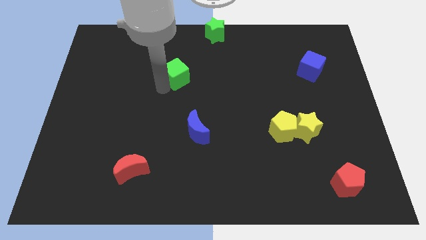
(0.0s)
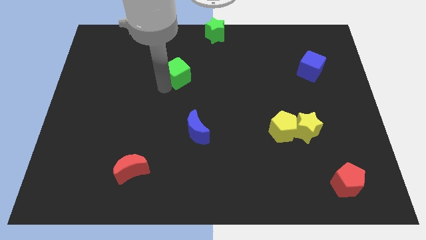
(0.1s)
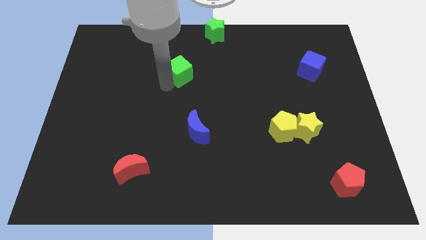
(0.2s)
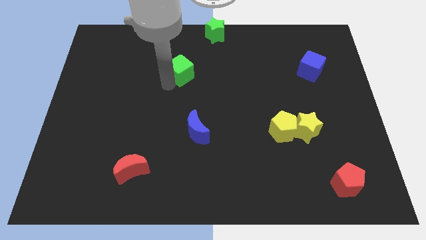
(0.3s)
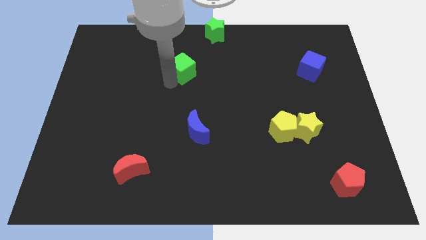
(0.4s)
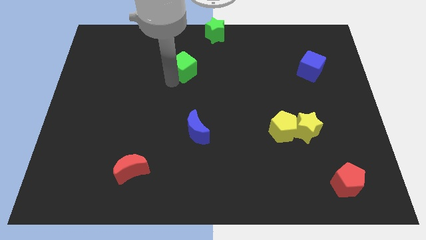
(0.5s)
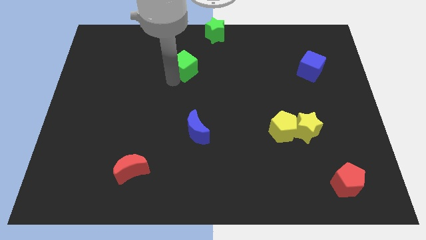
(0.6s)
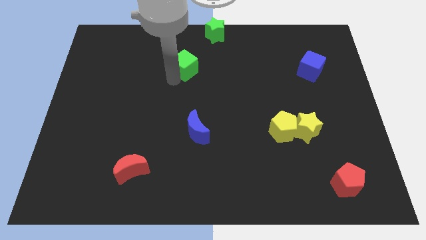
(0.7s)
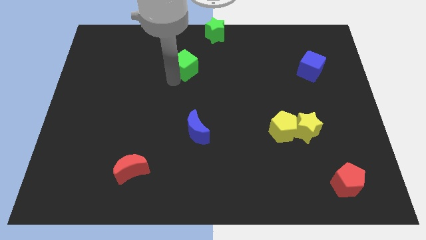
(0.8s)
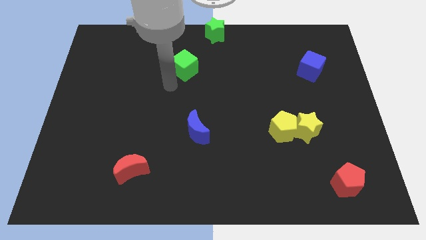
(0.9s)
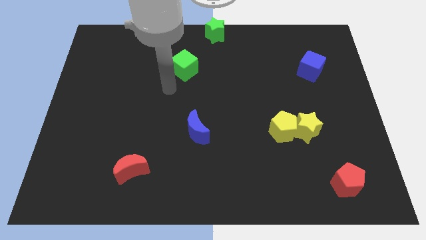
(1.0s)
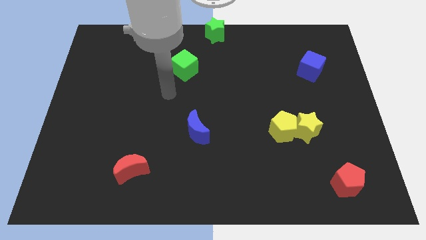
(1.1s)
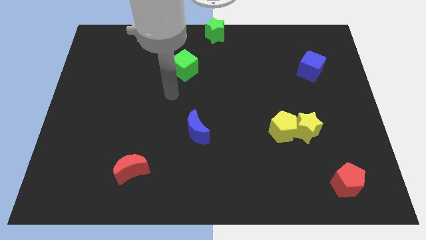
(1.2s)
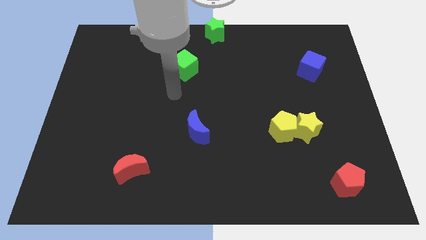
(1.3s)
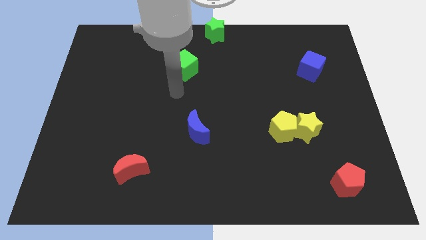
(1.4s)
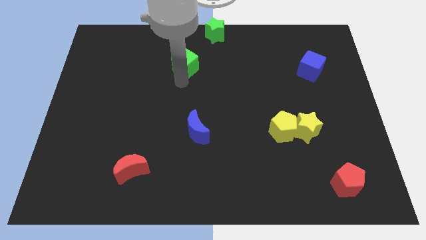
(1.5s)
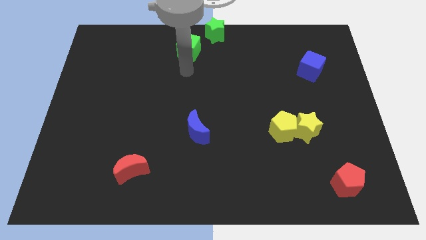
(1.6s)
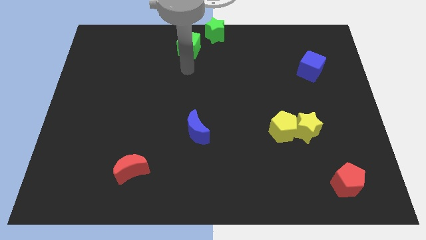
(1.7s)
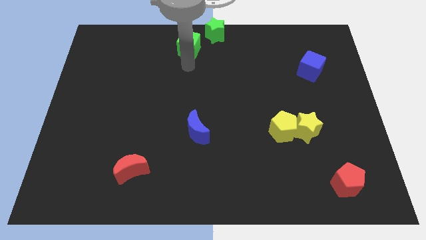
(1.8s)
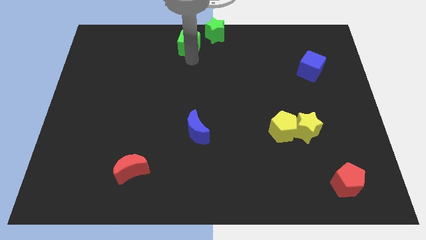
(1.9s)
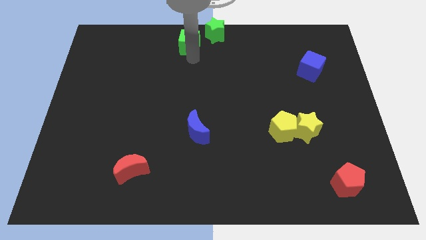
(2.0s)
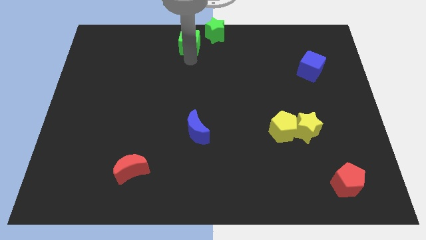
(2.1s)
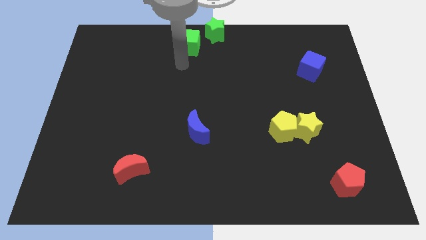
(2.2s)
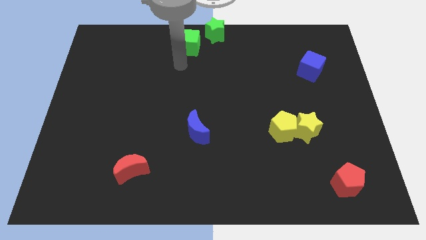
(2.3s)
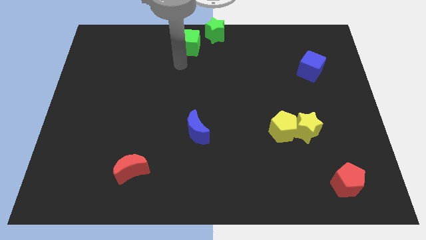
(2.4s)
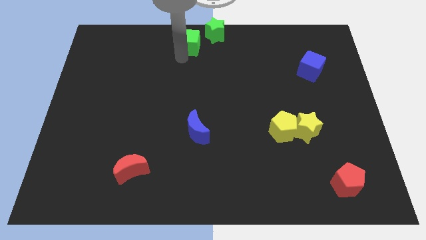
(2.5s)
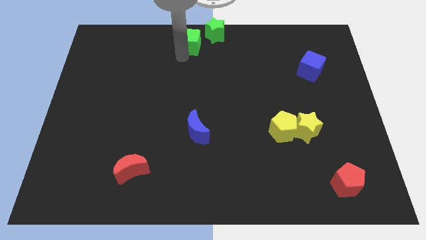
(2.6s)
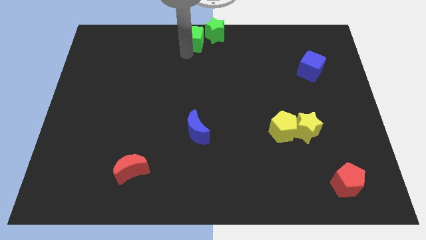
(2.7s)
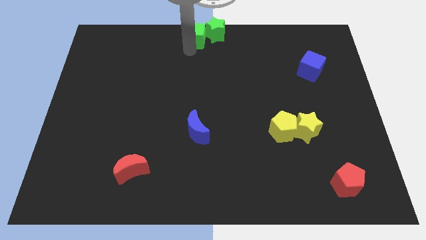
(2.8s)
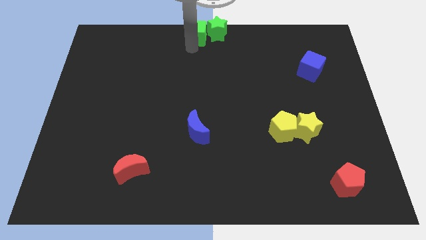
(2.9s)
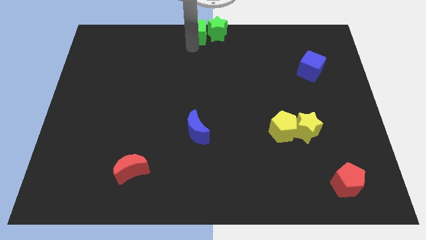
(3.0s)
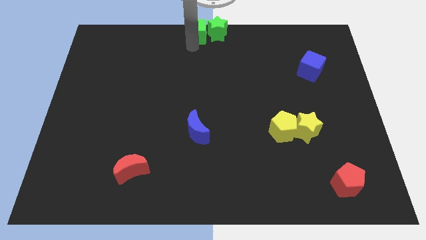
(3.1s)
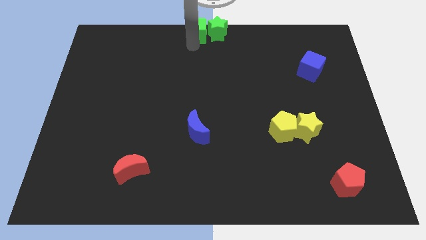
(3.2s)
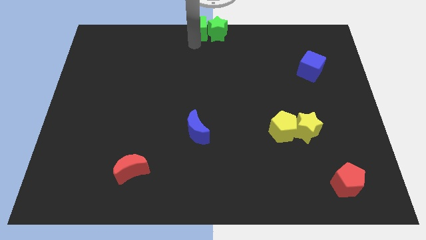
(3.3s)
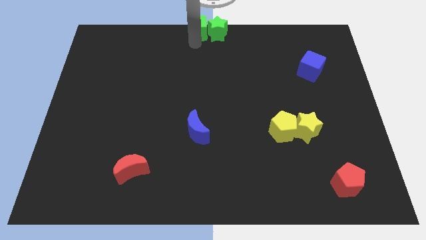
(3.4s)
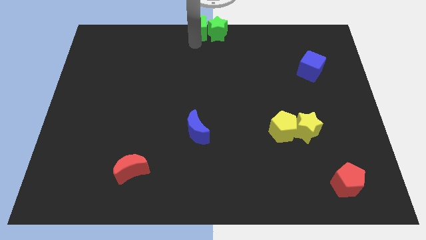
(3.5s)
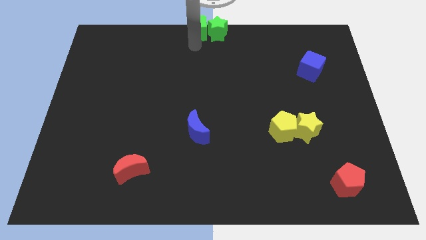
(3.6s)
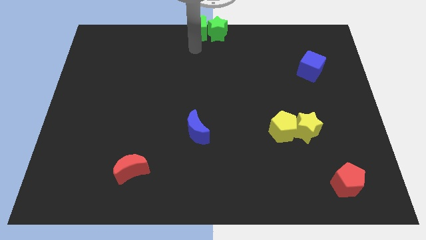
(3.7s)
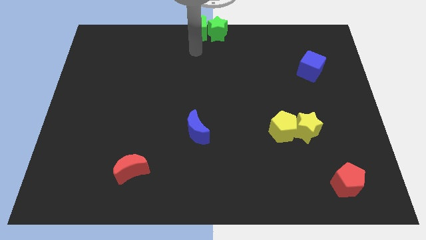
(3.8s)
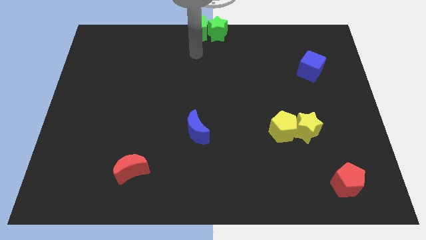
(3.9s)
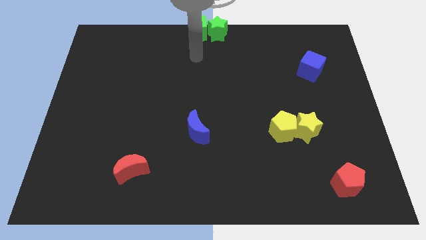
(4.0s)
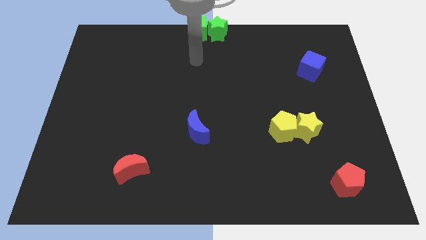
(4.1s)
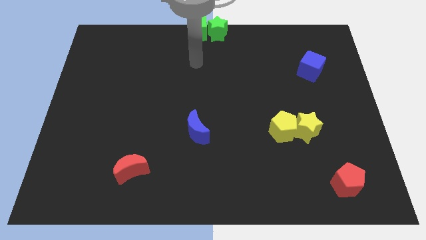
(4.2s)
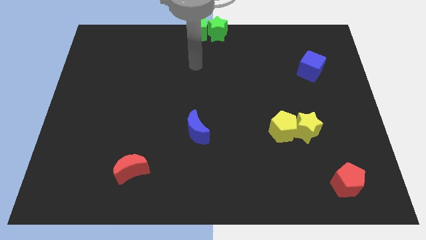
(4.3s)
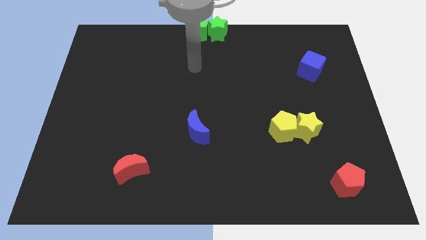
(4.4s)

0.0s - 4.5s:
place green cube beside green star

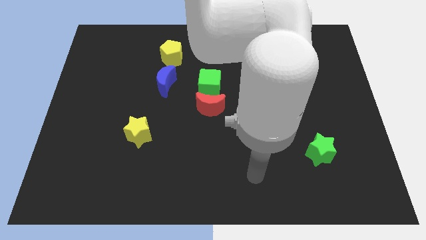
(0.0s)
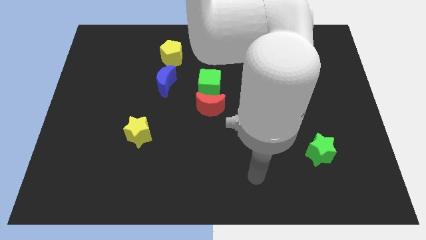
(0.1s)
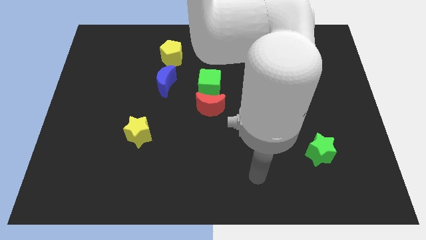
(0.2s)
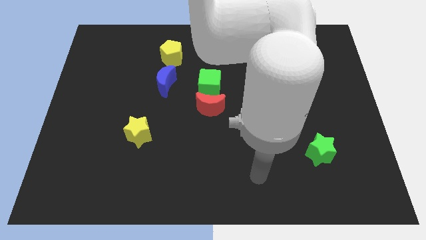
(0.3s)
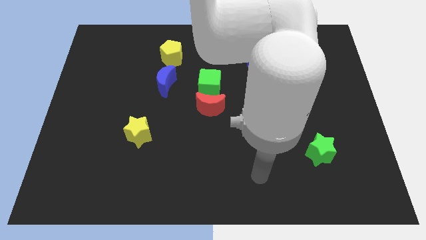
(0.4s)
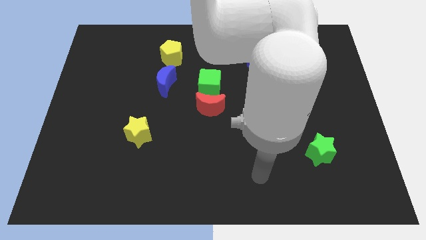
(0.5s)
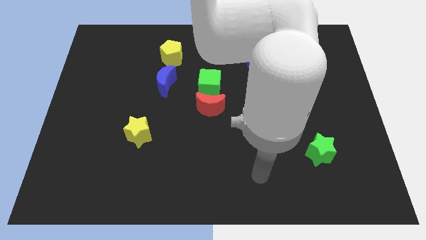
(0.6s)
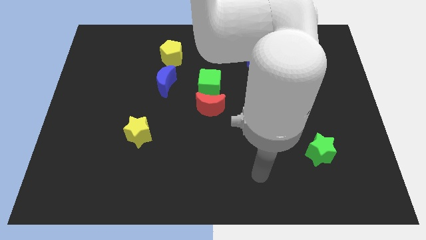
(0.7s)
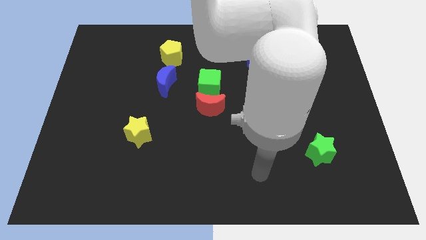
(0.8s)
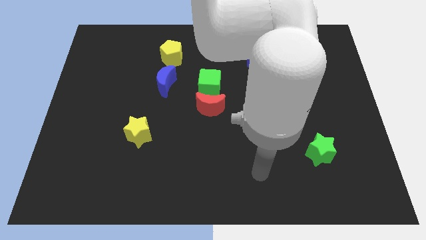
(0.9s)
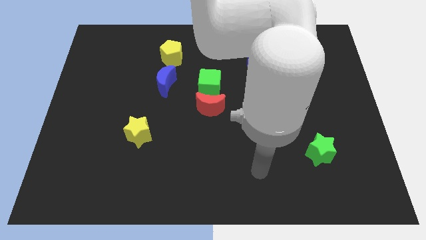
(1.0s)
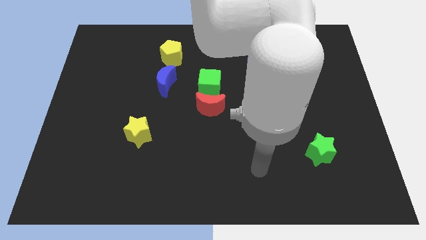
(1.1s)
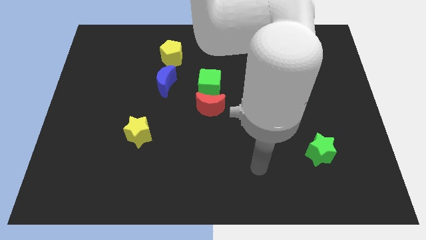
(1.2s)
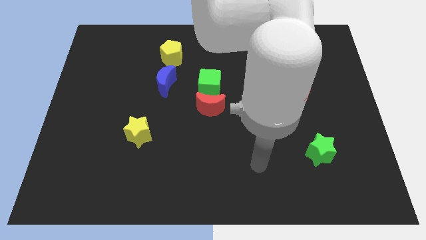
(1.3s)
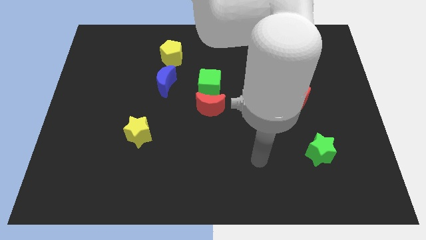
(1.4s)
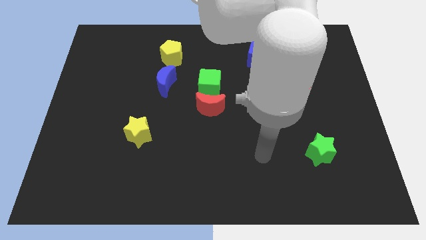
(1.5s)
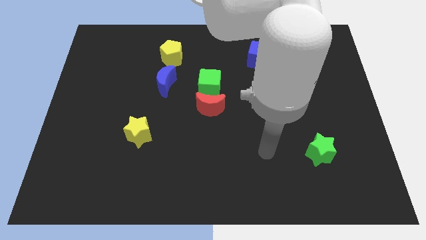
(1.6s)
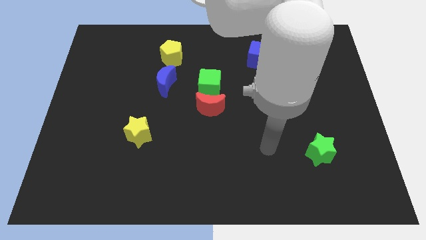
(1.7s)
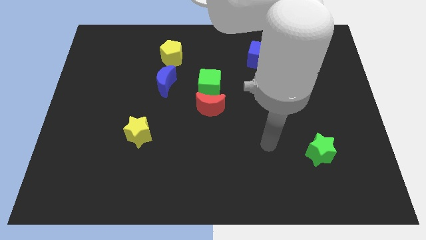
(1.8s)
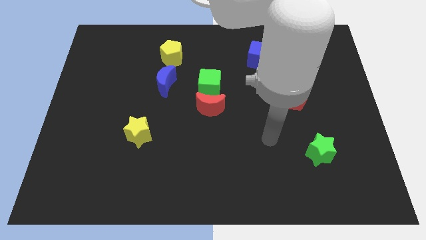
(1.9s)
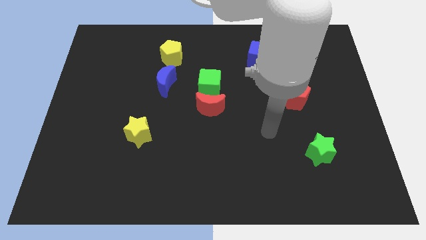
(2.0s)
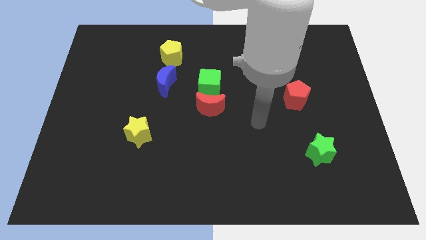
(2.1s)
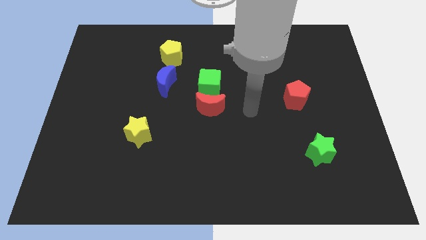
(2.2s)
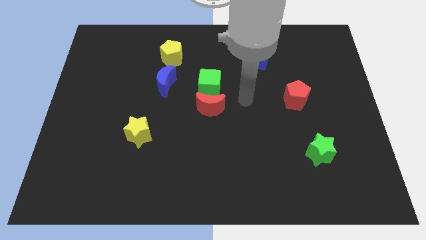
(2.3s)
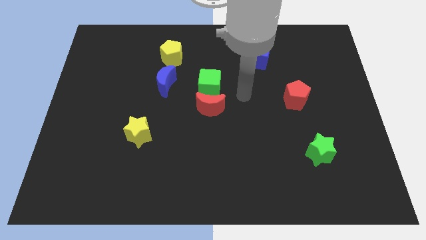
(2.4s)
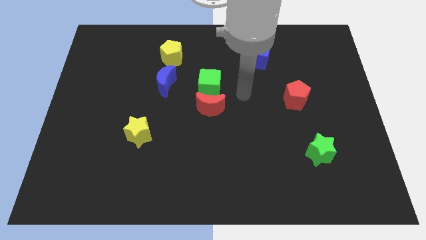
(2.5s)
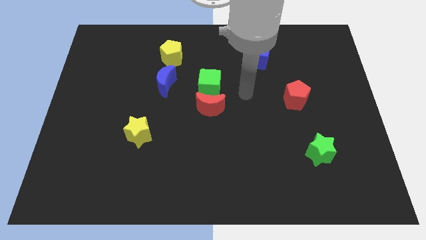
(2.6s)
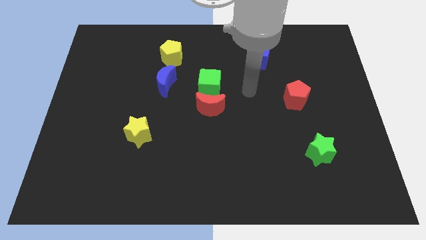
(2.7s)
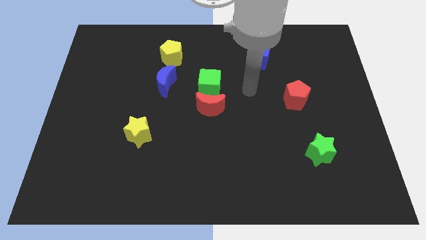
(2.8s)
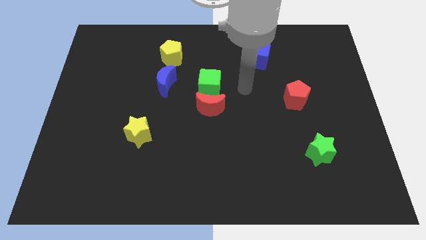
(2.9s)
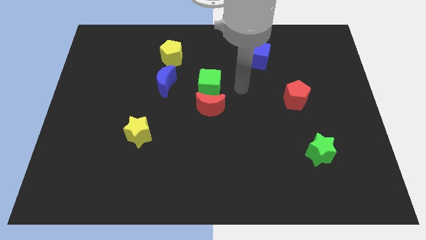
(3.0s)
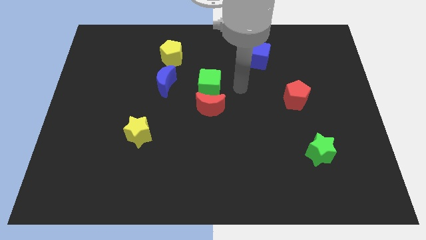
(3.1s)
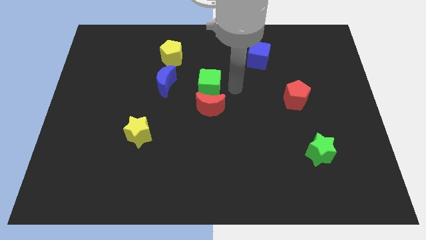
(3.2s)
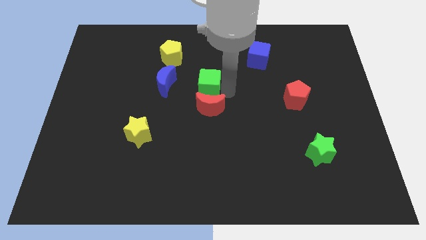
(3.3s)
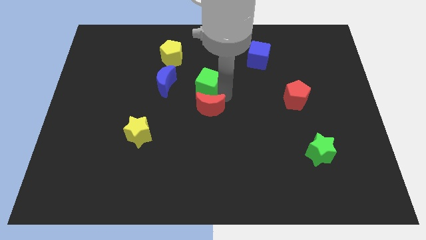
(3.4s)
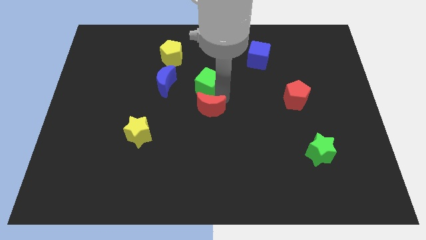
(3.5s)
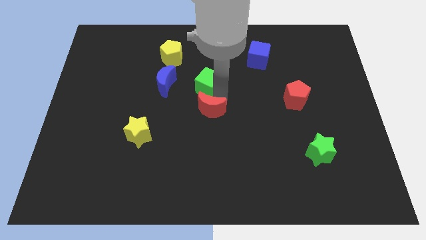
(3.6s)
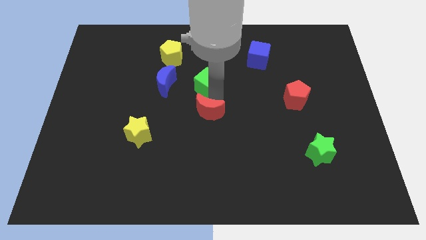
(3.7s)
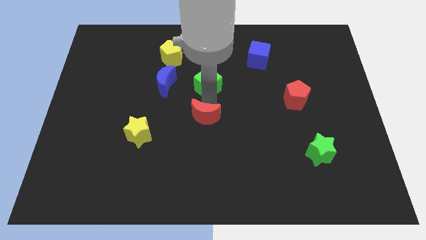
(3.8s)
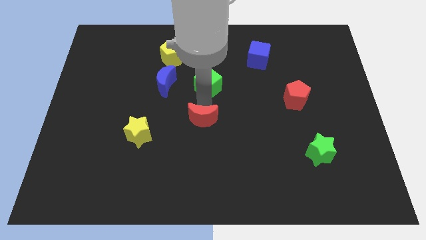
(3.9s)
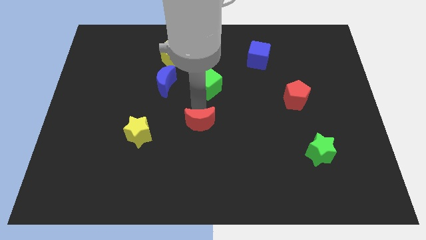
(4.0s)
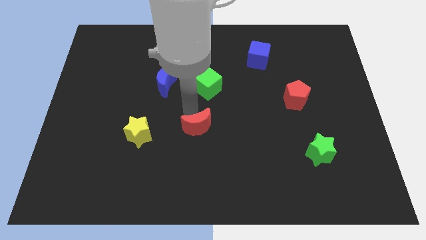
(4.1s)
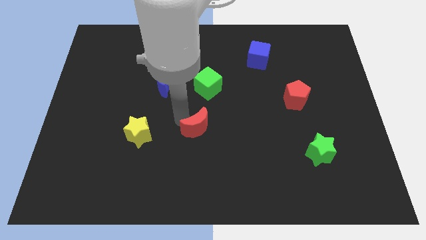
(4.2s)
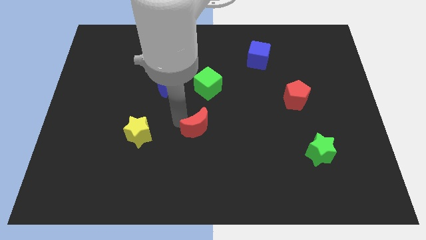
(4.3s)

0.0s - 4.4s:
go and separate the red crescent from the green cube

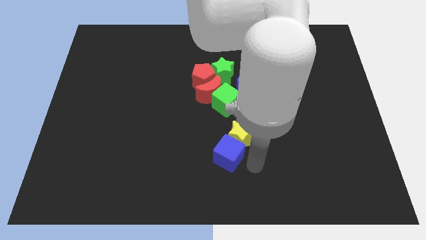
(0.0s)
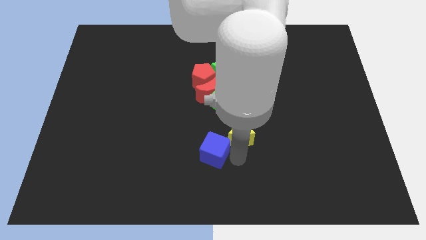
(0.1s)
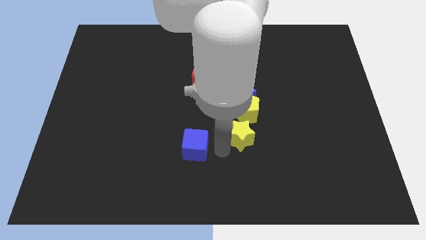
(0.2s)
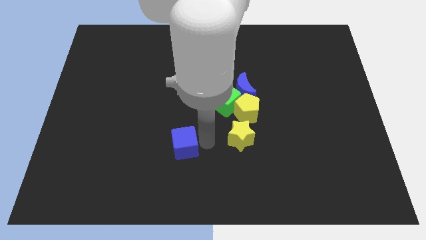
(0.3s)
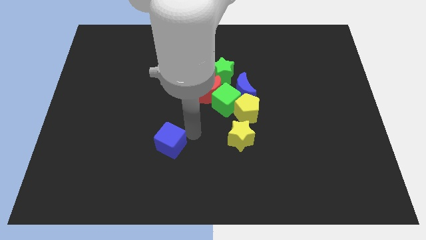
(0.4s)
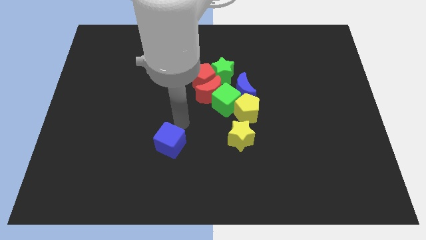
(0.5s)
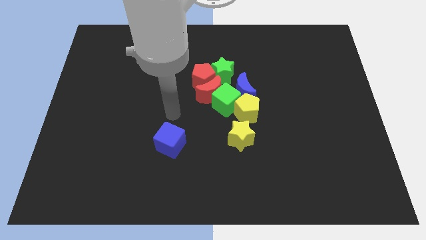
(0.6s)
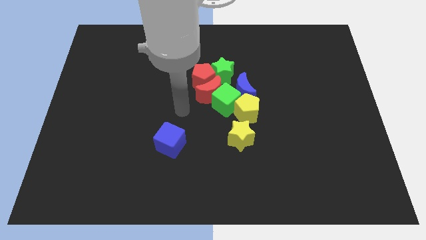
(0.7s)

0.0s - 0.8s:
push the blue cube away from the yellow star
